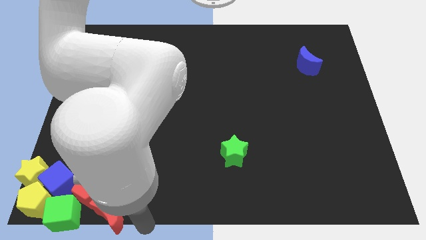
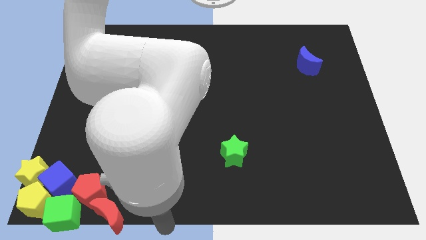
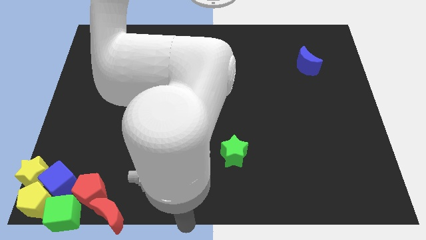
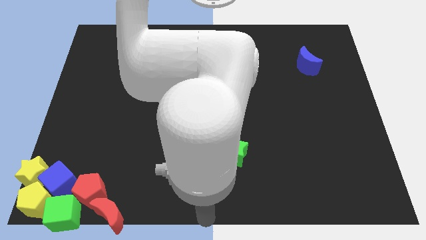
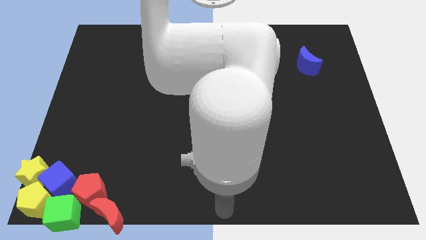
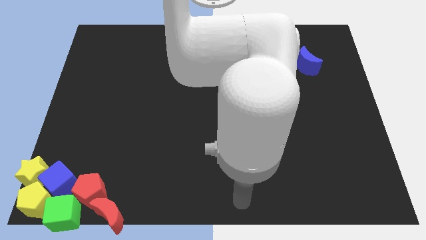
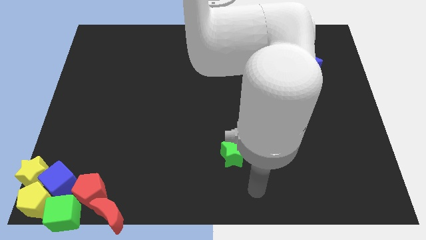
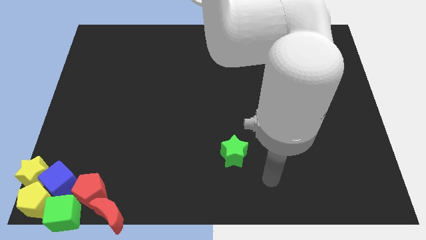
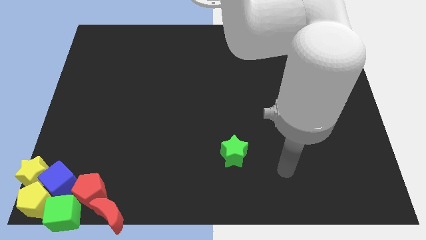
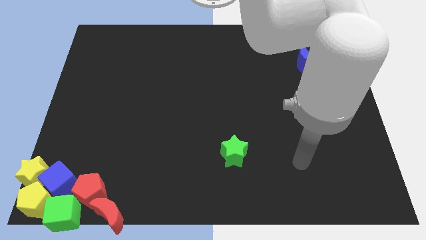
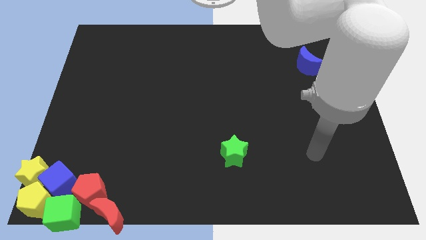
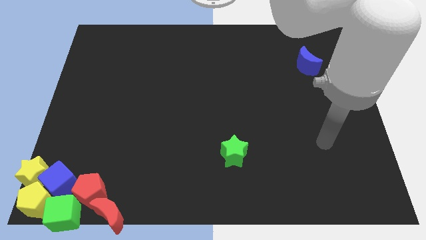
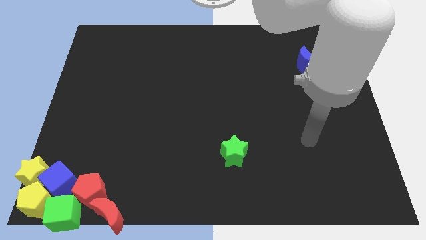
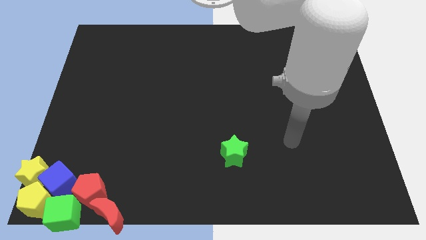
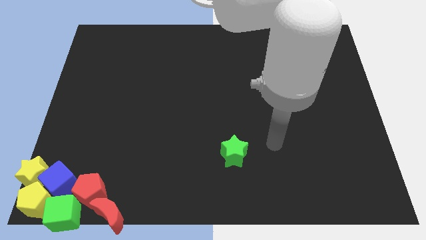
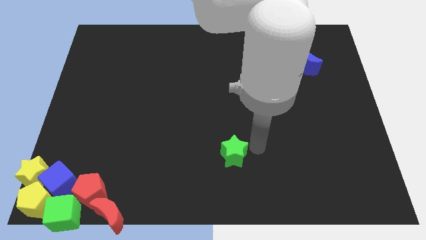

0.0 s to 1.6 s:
move your arm right to the green star

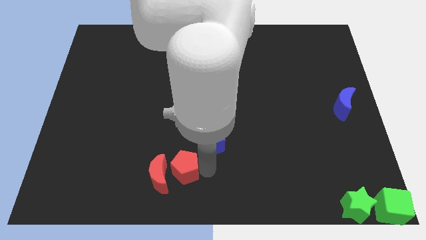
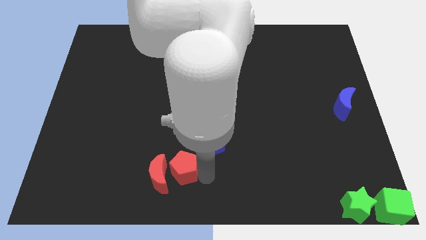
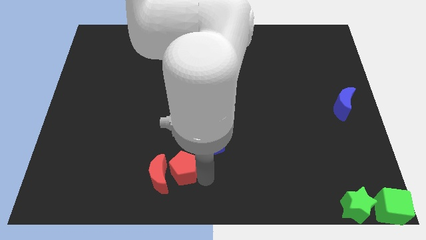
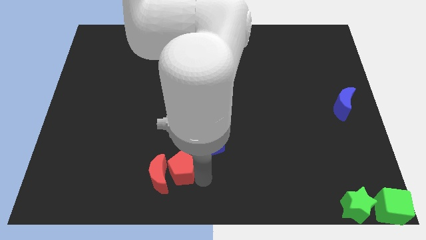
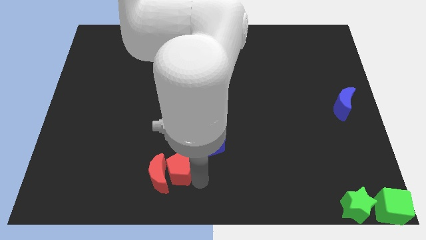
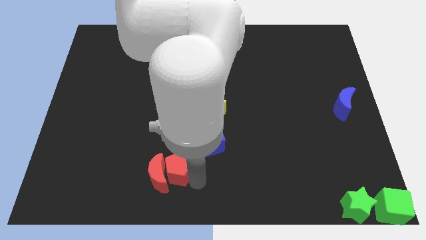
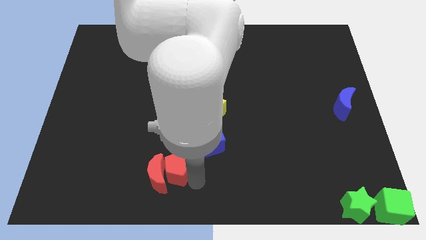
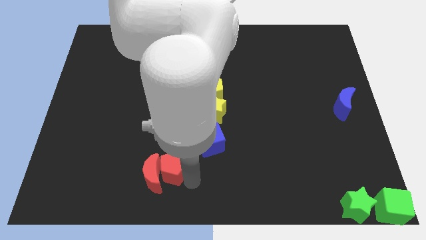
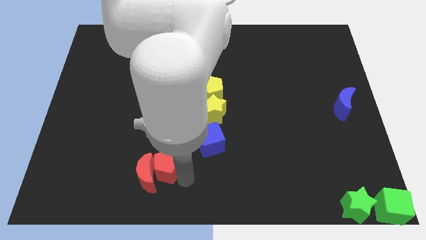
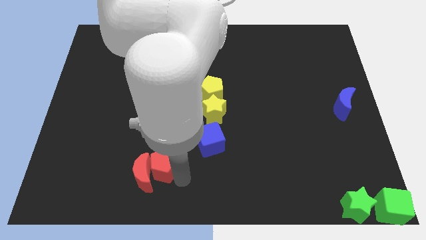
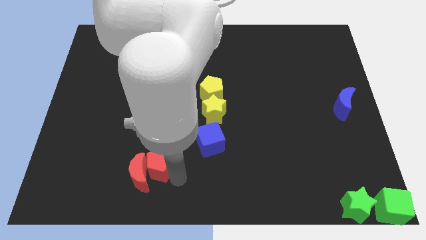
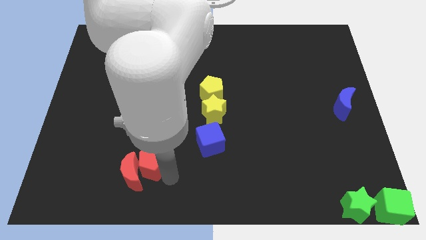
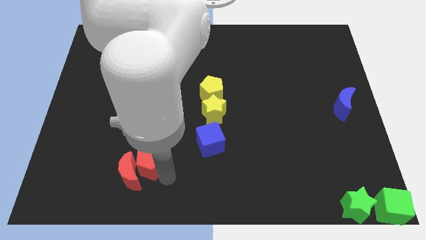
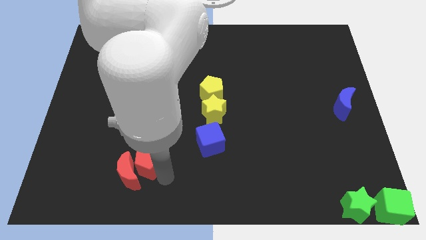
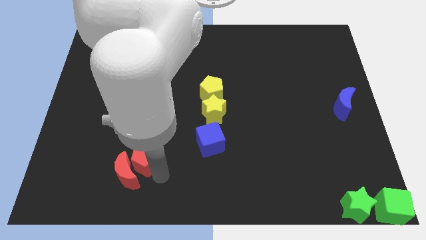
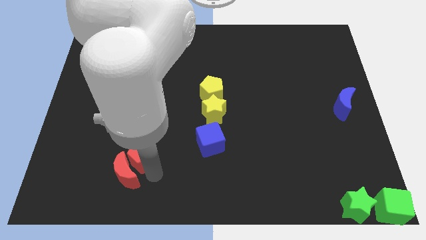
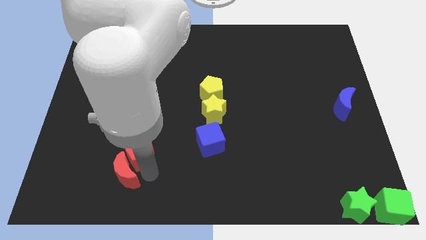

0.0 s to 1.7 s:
push the red pentagon into the red moon

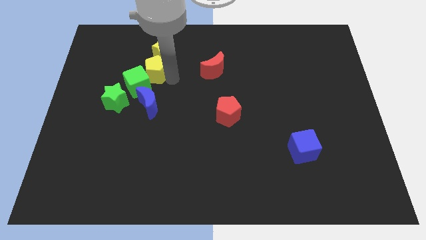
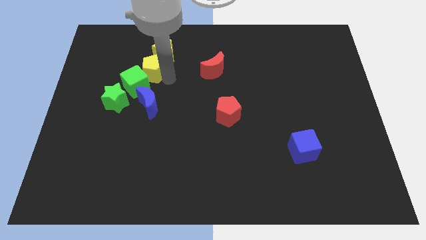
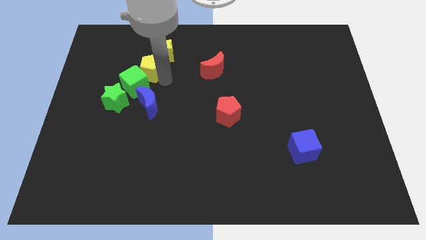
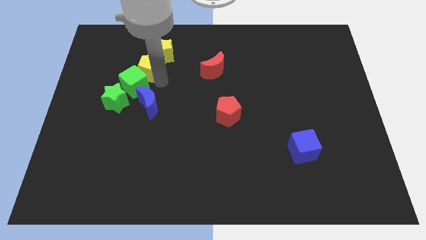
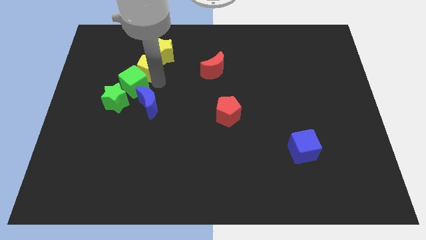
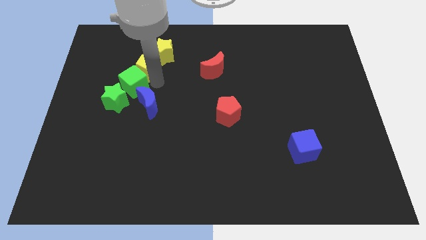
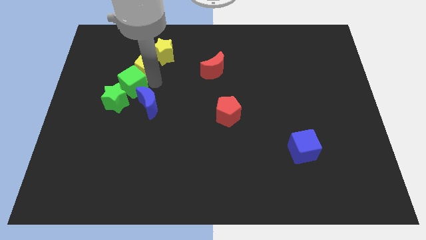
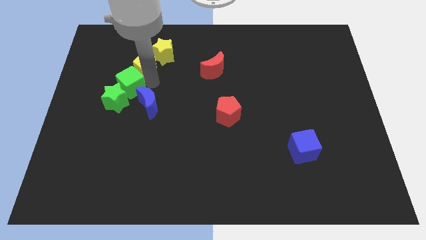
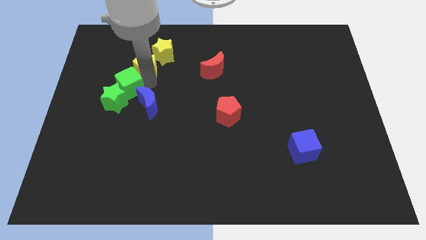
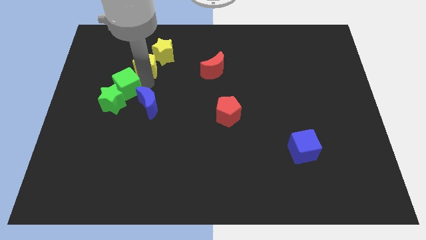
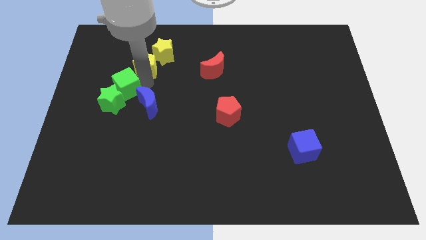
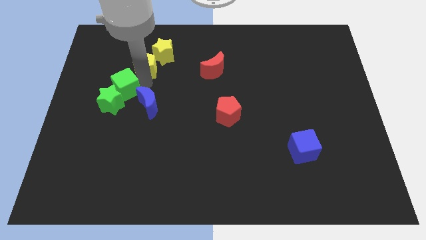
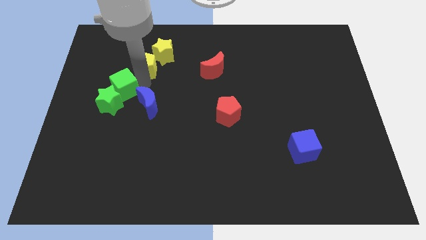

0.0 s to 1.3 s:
push yellow pentagon slightly left

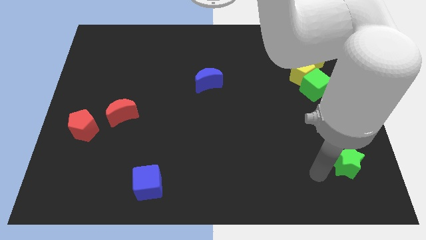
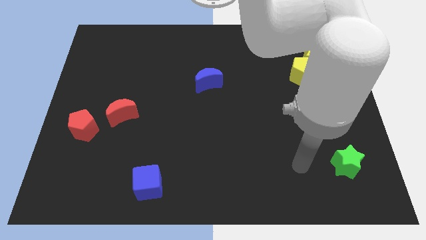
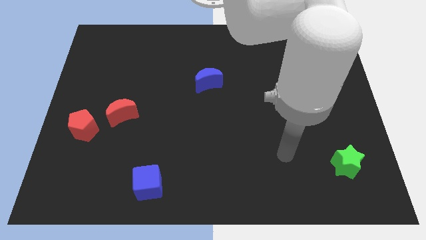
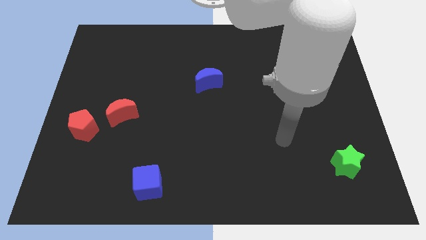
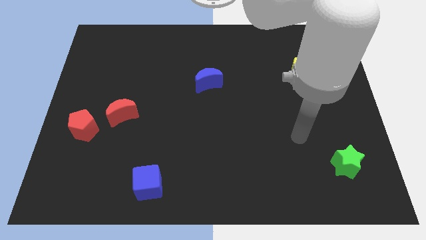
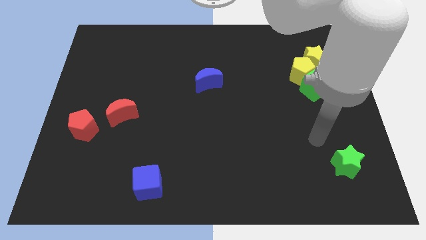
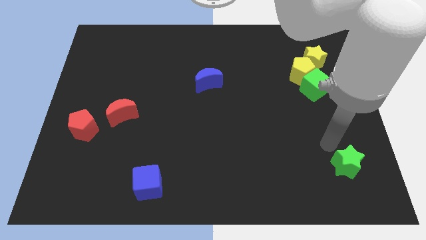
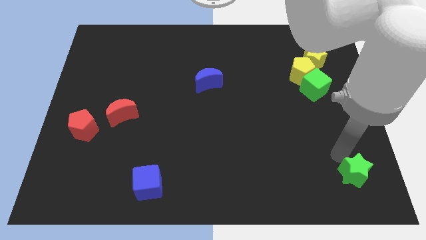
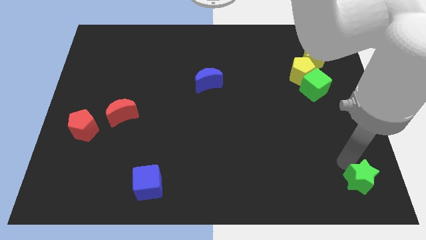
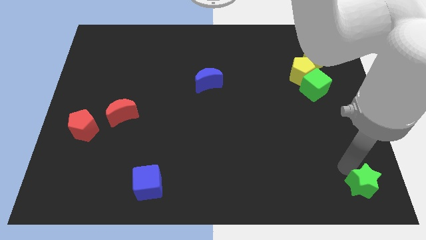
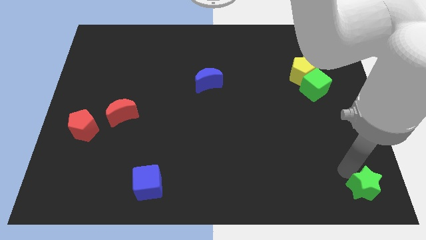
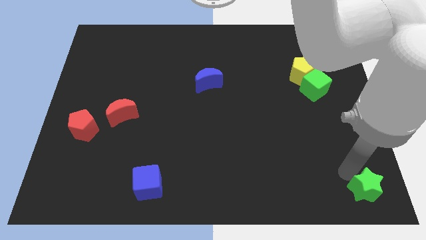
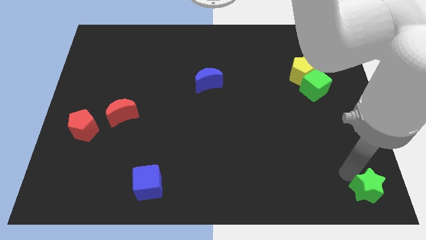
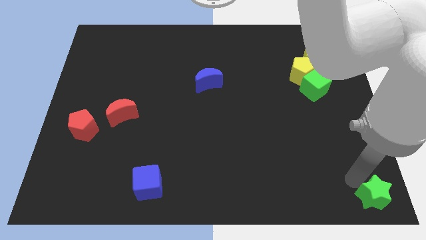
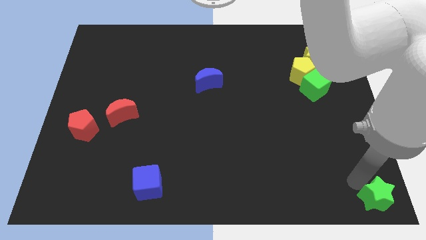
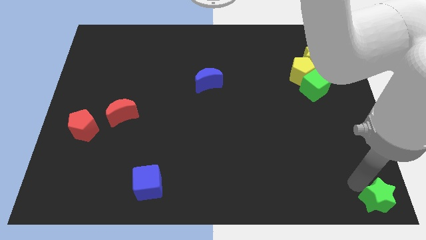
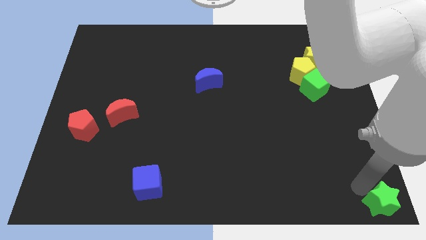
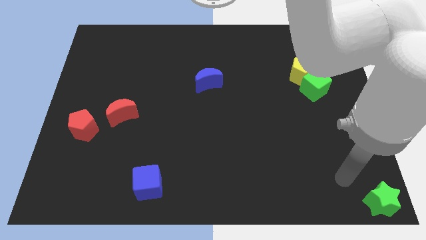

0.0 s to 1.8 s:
move the green star to the bottom right corner of the board

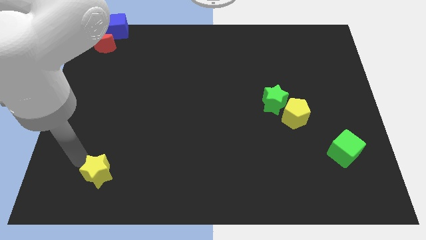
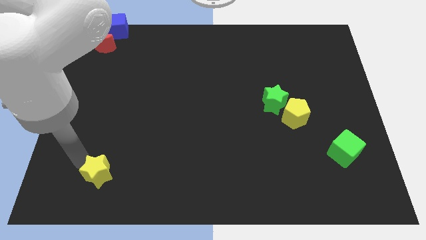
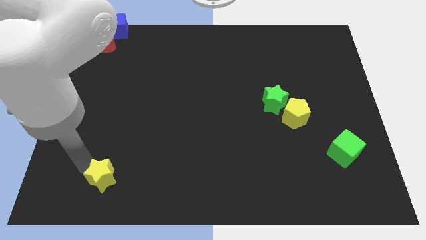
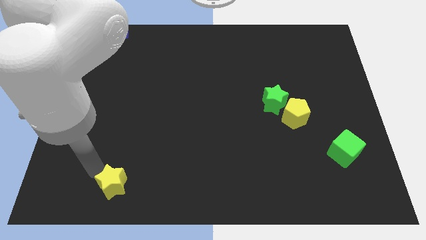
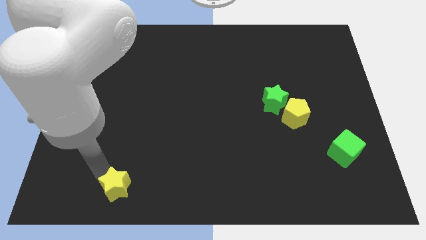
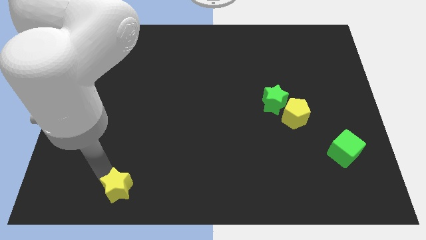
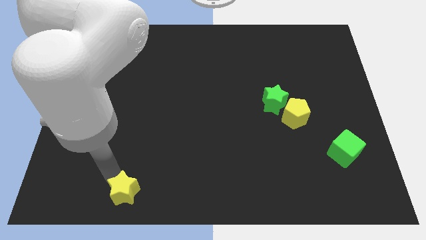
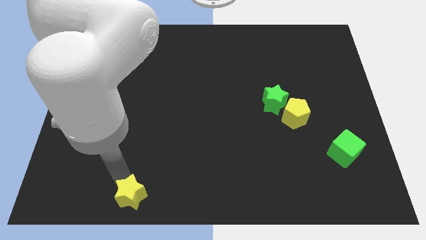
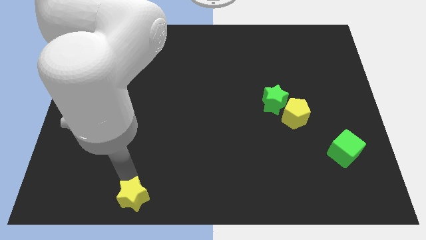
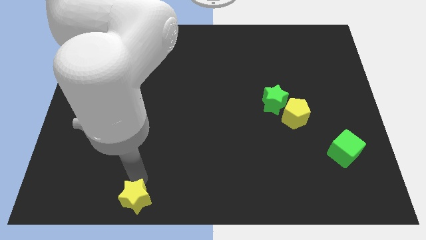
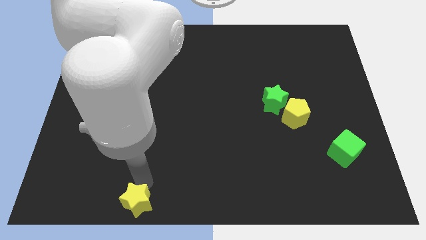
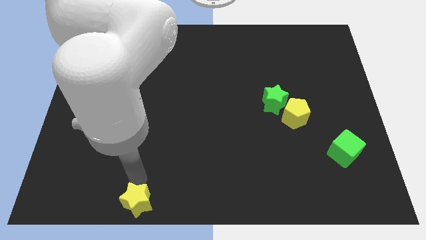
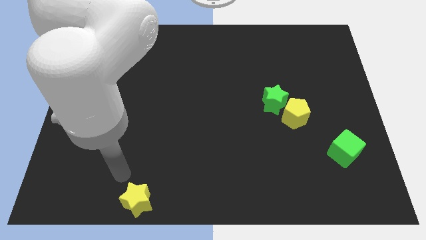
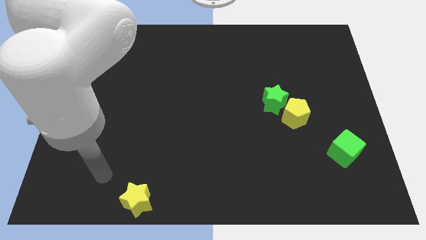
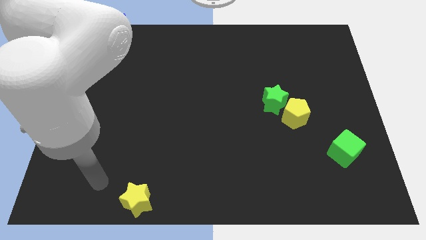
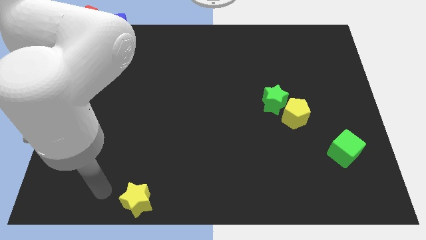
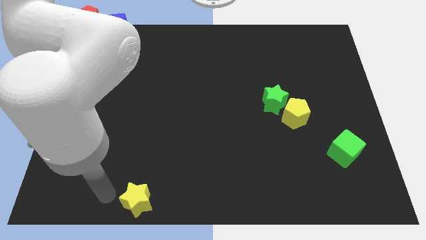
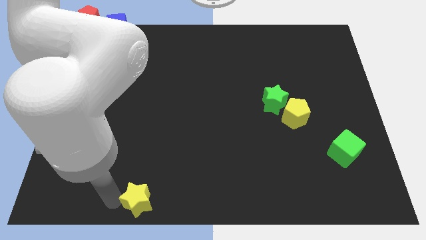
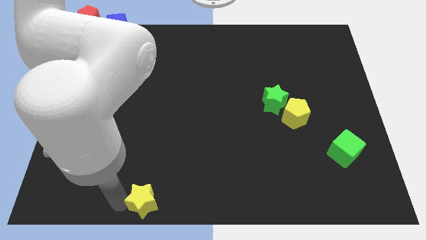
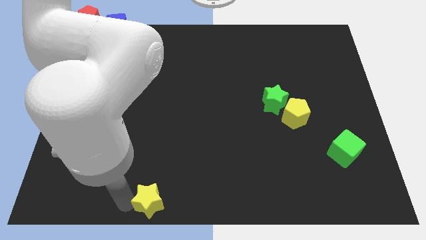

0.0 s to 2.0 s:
drag the yellow star towards the bottom right side of the board

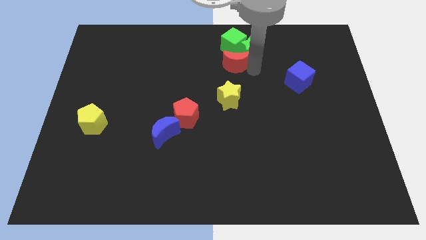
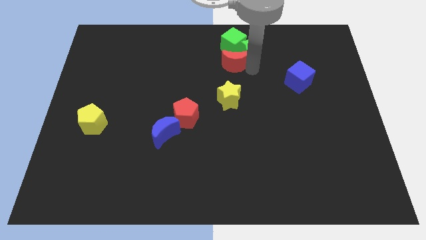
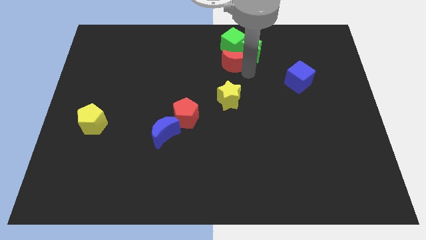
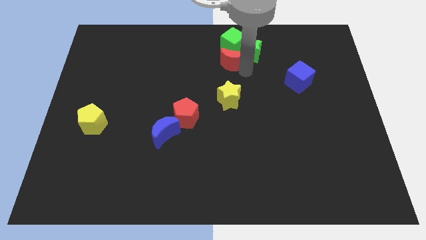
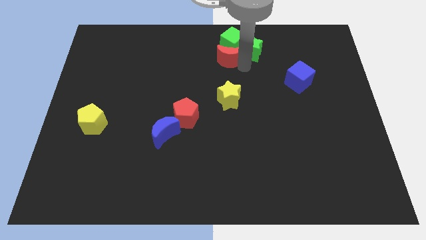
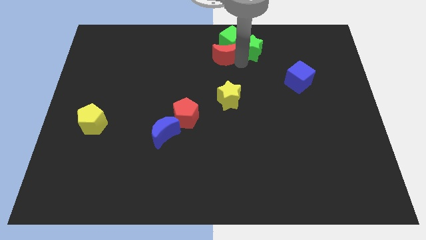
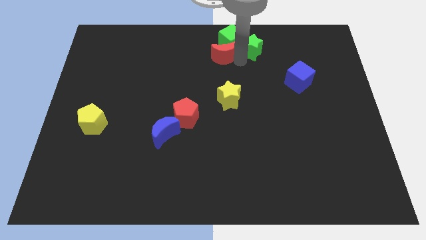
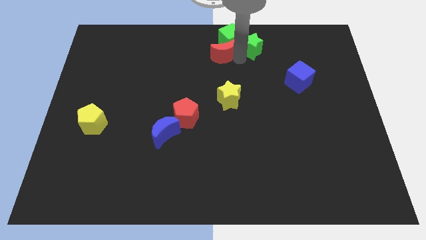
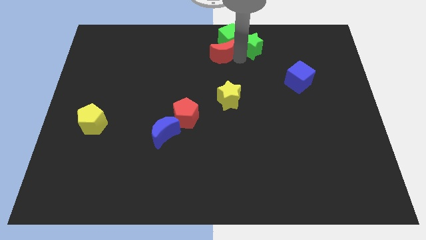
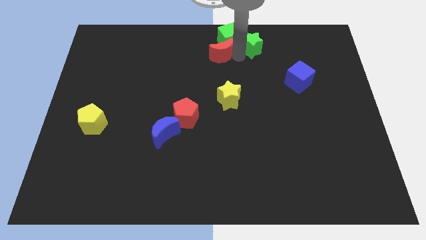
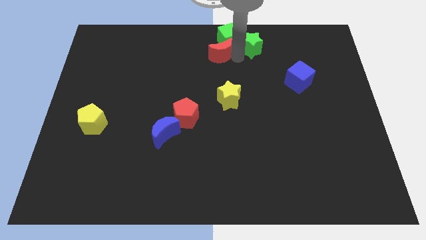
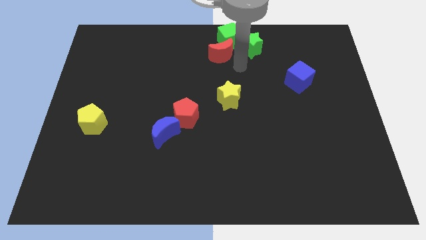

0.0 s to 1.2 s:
place your hand in between red moon and green star
